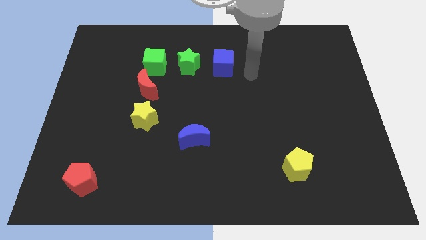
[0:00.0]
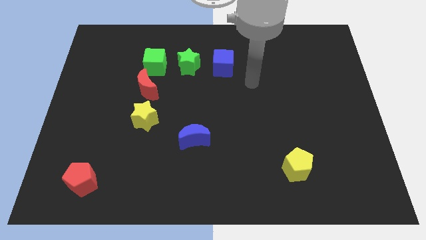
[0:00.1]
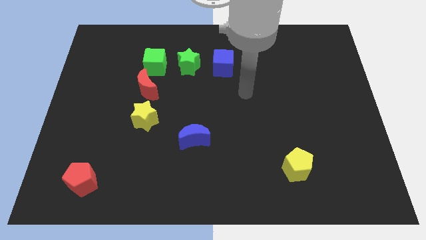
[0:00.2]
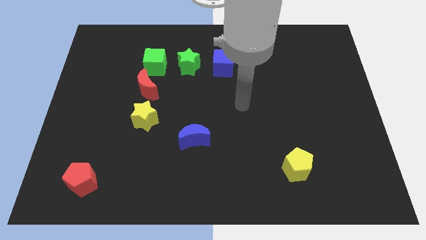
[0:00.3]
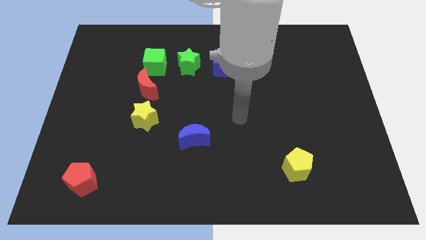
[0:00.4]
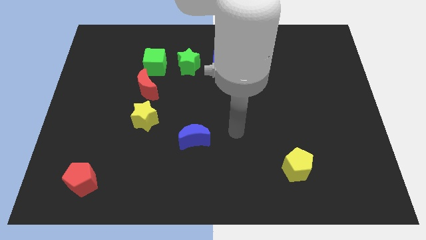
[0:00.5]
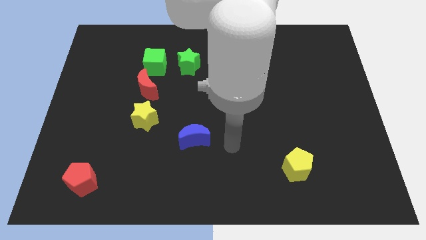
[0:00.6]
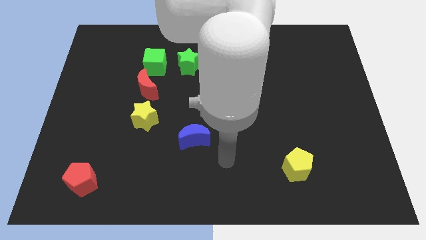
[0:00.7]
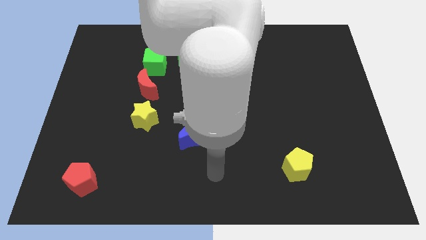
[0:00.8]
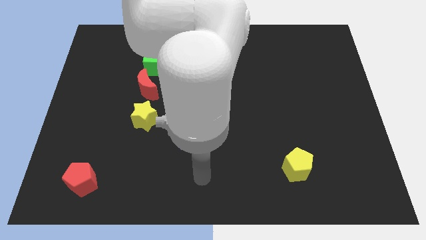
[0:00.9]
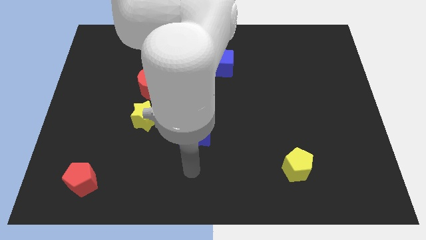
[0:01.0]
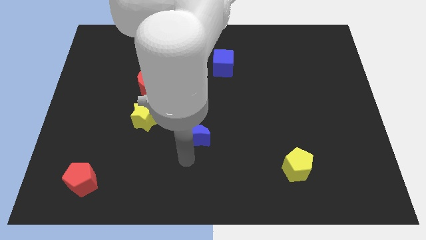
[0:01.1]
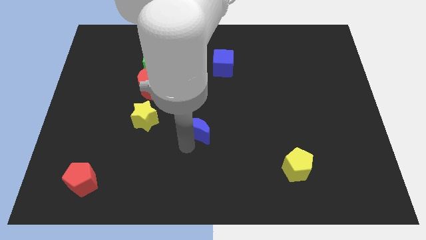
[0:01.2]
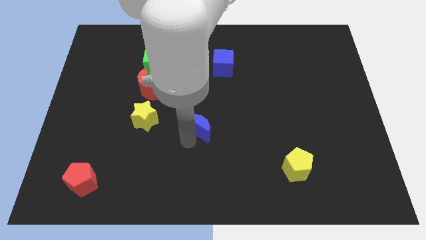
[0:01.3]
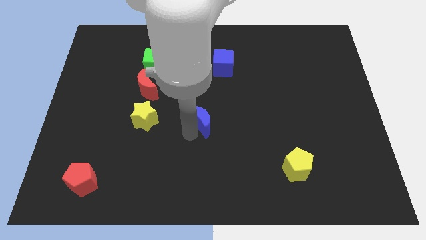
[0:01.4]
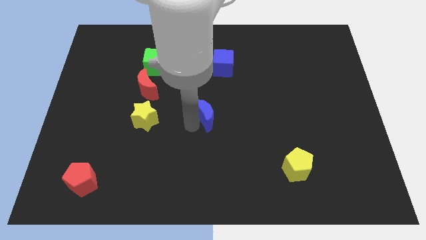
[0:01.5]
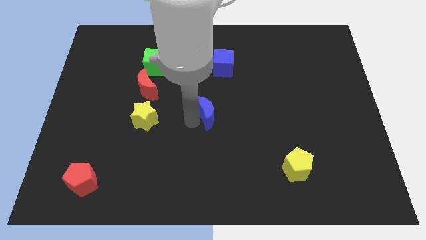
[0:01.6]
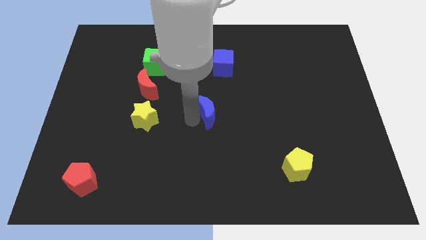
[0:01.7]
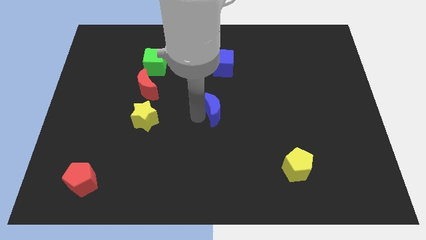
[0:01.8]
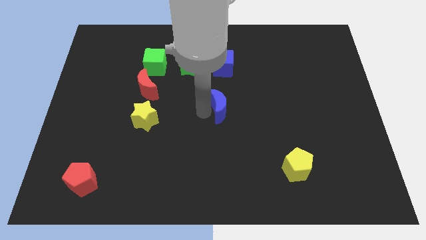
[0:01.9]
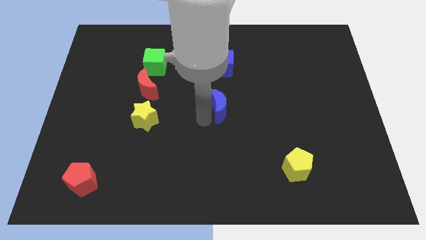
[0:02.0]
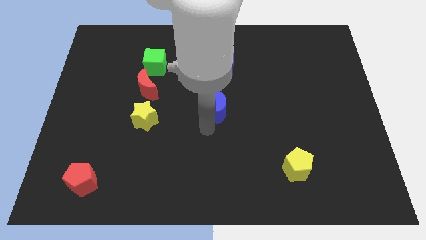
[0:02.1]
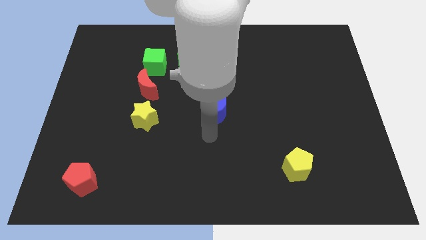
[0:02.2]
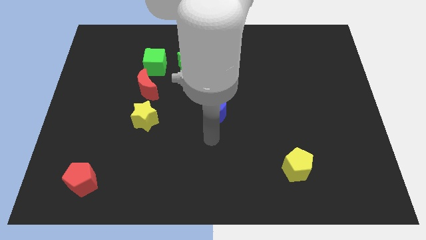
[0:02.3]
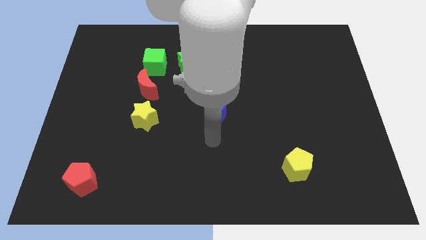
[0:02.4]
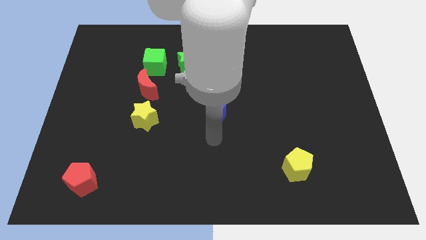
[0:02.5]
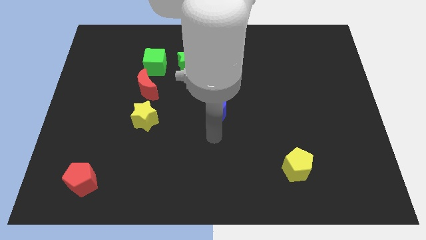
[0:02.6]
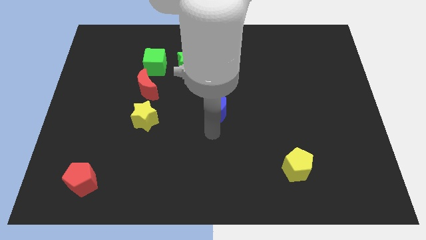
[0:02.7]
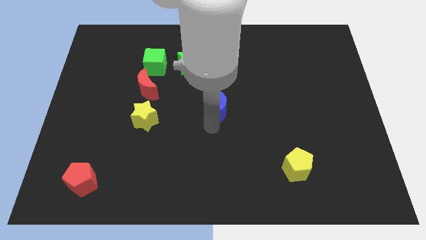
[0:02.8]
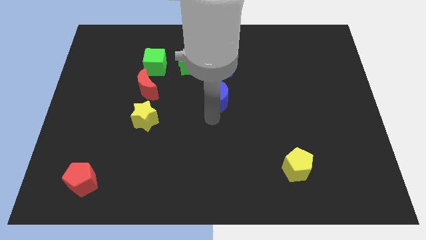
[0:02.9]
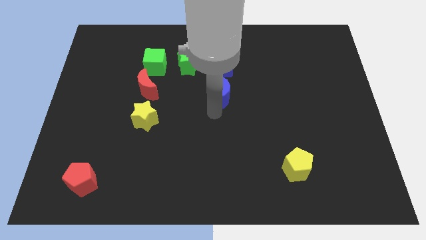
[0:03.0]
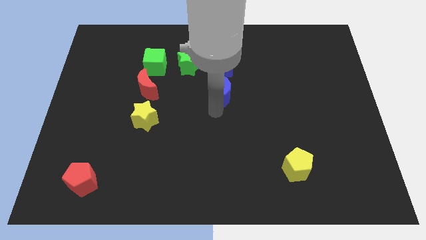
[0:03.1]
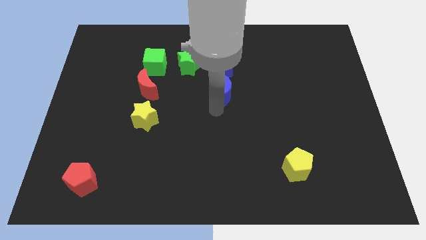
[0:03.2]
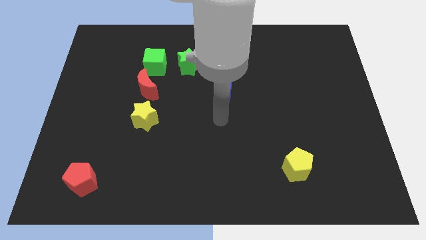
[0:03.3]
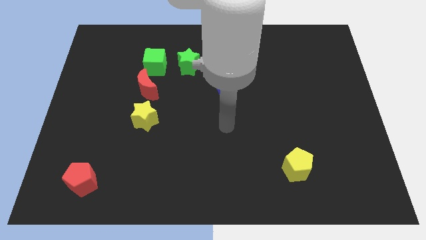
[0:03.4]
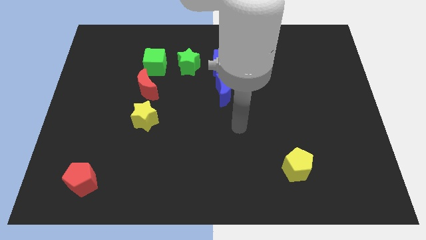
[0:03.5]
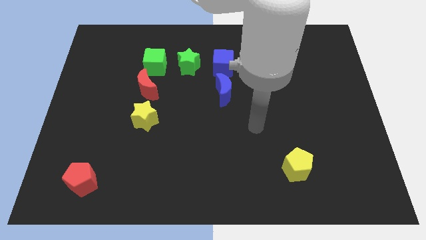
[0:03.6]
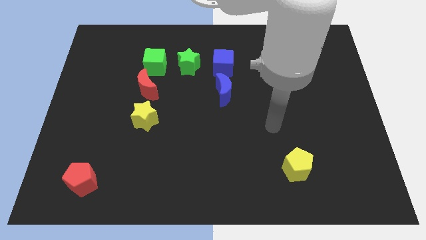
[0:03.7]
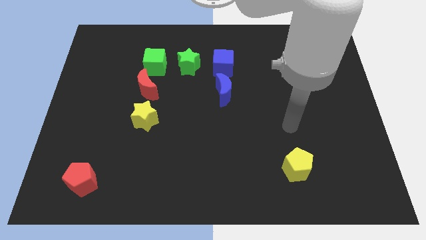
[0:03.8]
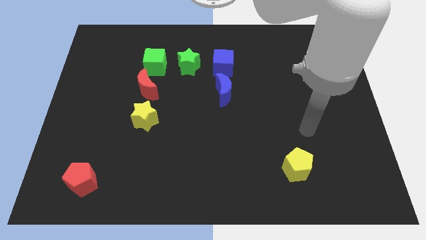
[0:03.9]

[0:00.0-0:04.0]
drag the blue moon below the blue cube

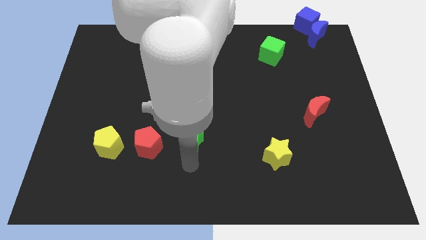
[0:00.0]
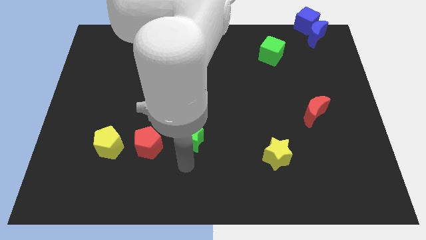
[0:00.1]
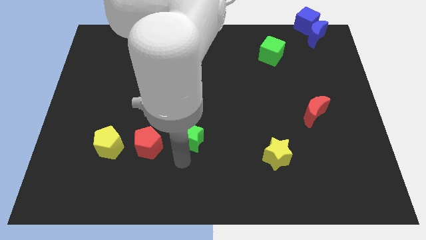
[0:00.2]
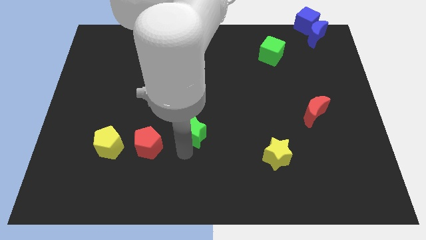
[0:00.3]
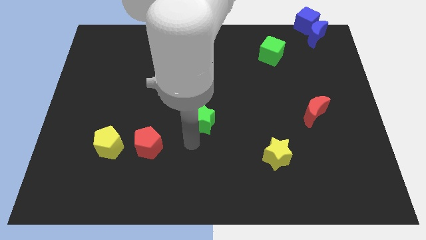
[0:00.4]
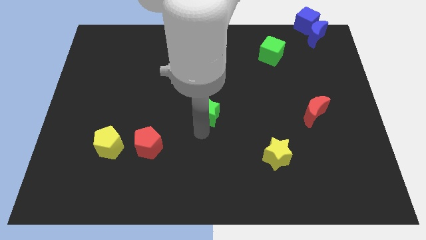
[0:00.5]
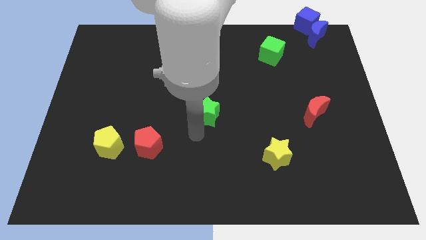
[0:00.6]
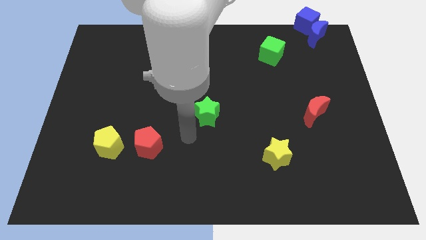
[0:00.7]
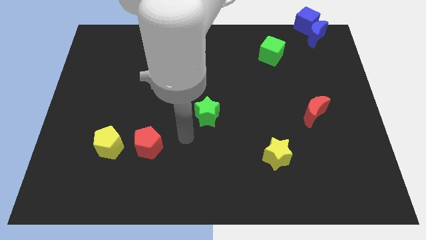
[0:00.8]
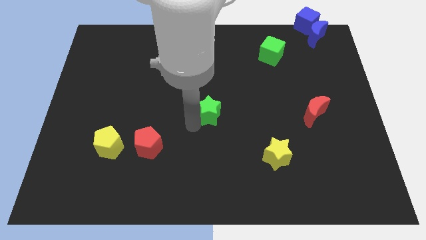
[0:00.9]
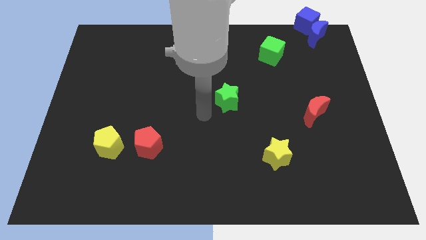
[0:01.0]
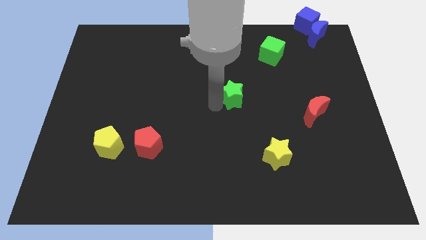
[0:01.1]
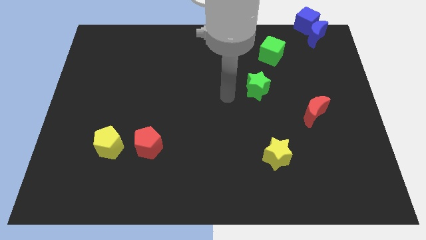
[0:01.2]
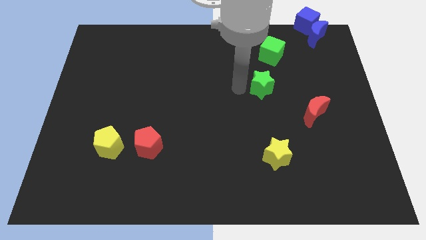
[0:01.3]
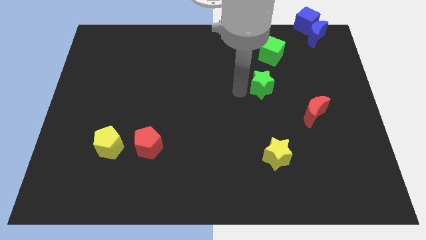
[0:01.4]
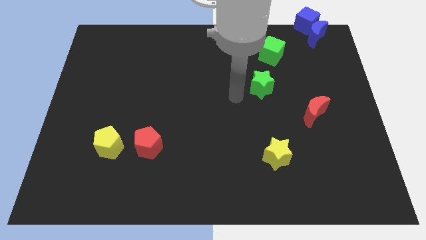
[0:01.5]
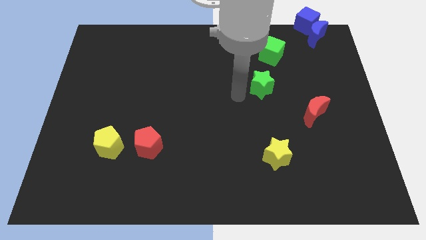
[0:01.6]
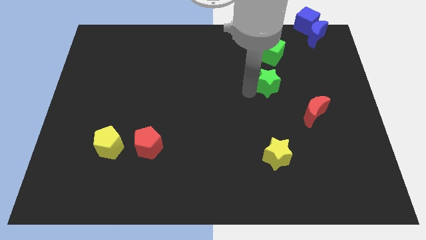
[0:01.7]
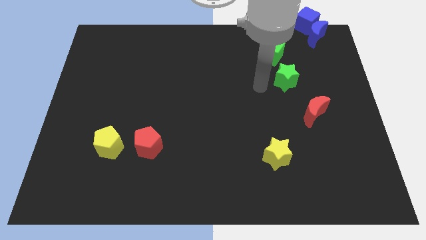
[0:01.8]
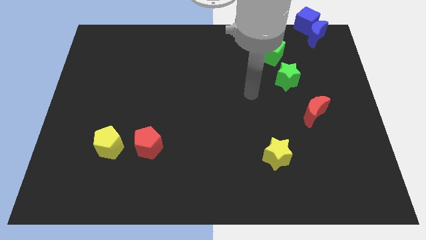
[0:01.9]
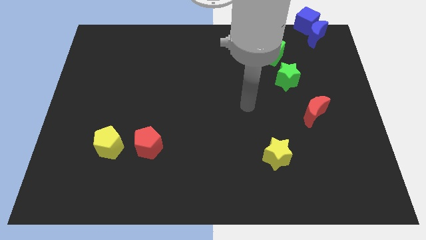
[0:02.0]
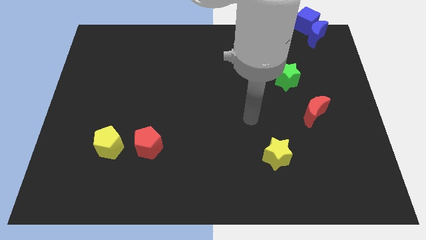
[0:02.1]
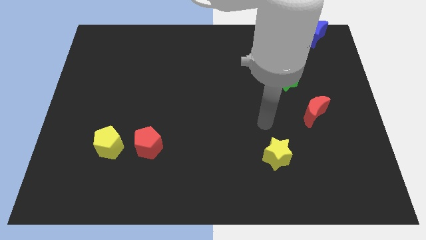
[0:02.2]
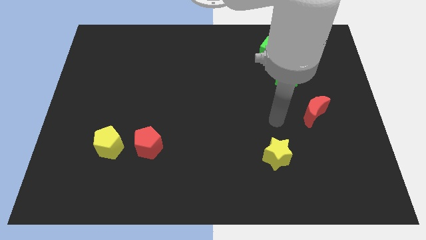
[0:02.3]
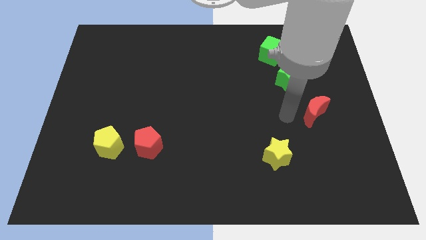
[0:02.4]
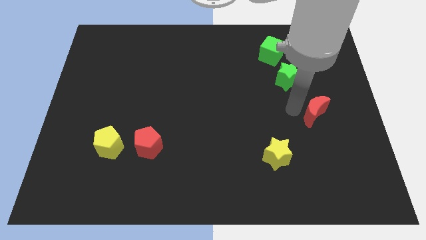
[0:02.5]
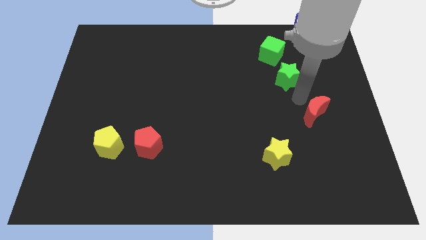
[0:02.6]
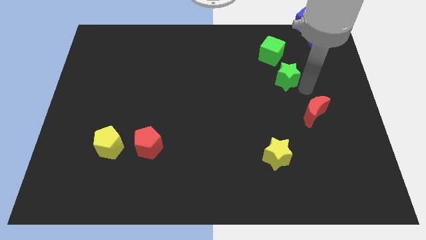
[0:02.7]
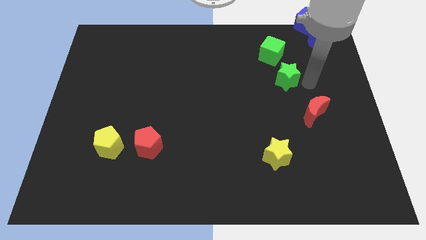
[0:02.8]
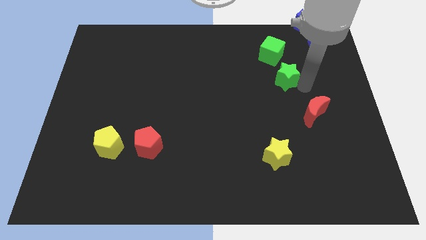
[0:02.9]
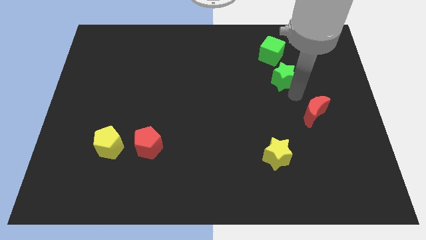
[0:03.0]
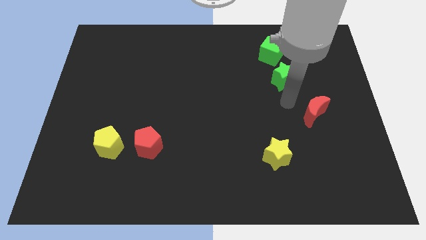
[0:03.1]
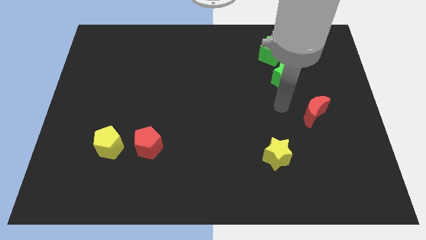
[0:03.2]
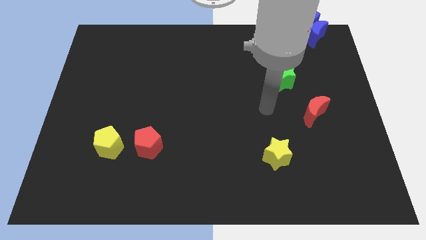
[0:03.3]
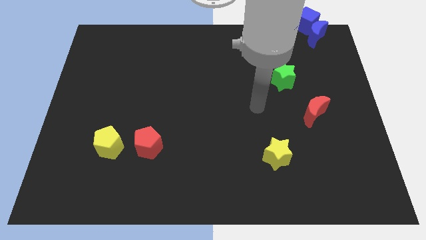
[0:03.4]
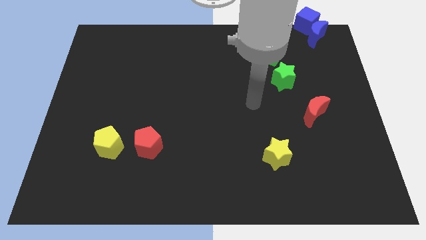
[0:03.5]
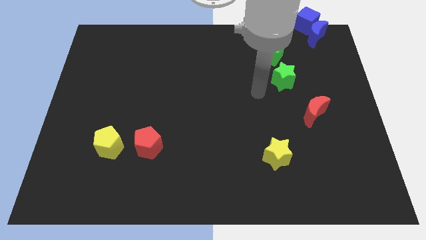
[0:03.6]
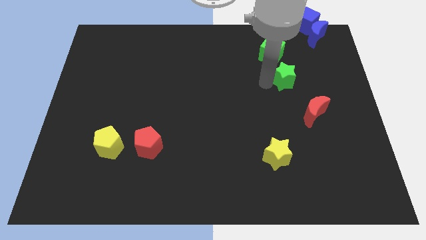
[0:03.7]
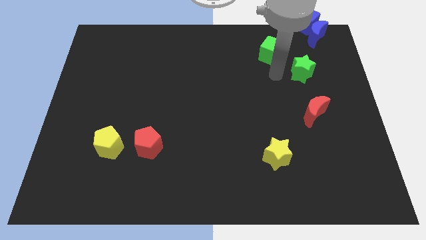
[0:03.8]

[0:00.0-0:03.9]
place the green star between red moon and green cube

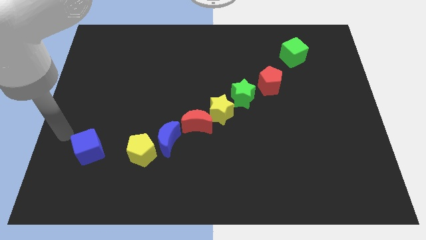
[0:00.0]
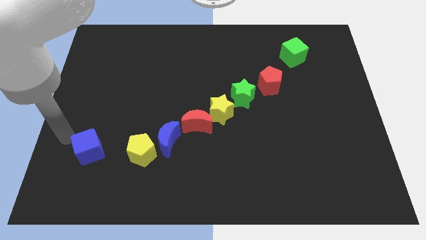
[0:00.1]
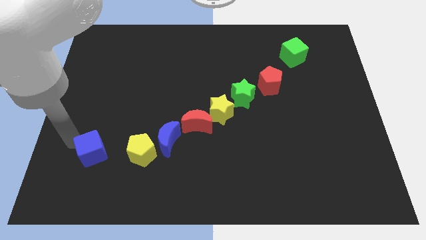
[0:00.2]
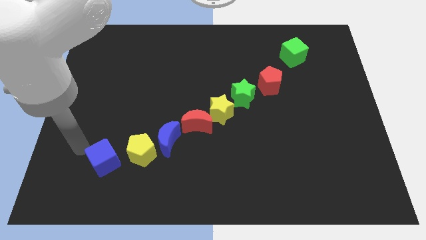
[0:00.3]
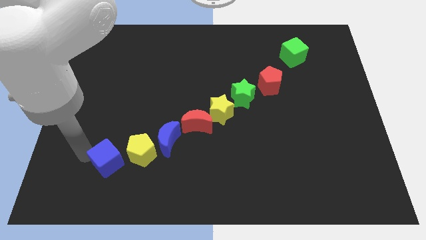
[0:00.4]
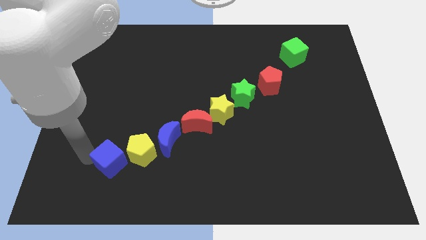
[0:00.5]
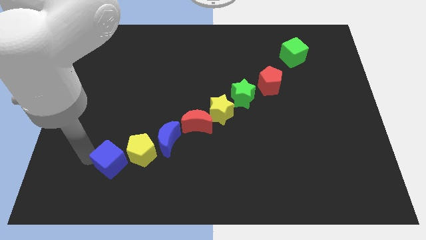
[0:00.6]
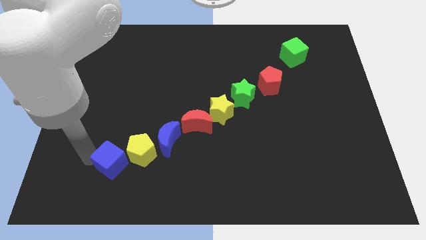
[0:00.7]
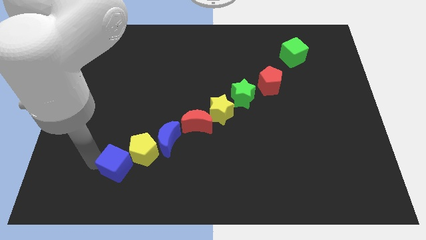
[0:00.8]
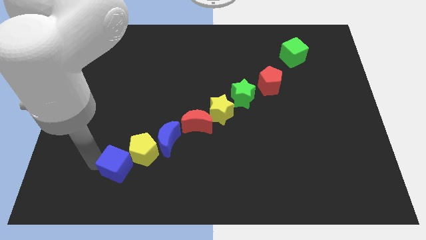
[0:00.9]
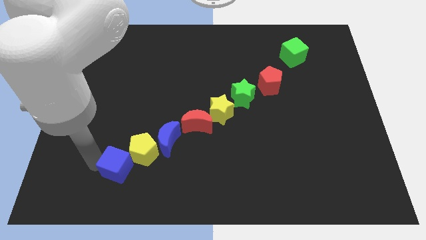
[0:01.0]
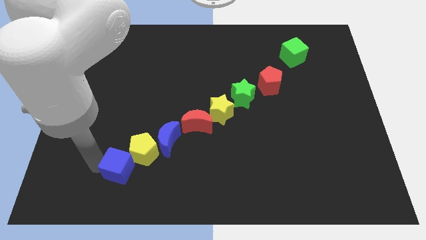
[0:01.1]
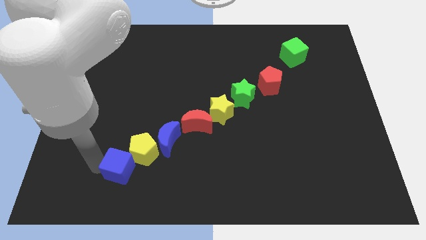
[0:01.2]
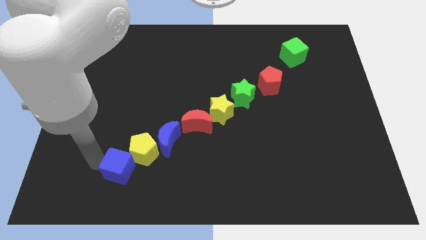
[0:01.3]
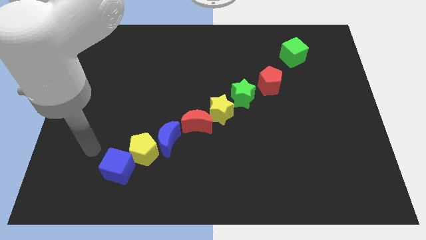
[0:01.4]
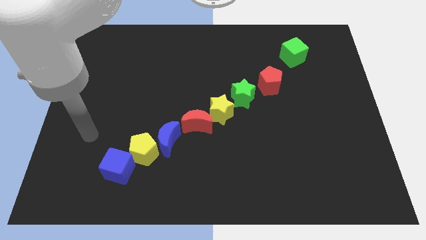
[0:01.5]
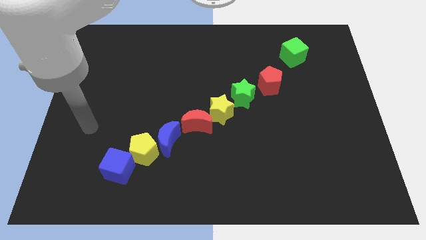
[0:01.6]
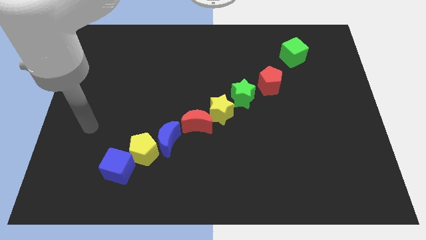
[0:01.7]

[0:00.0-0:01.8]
make the blue cube touch the bottom left of the yellow pentagon
